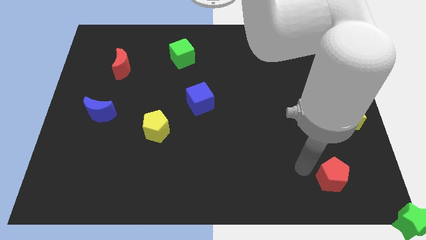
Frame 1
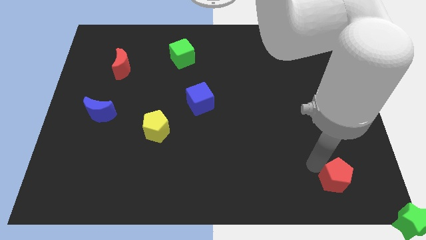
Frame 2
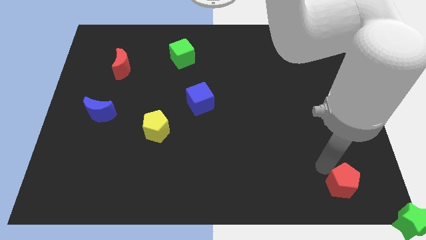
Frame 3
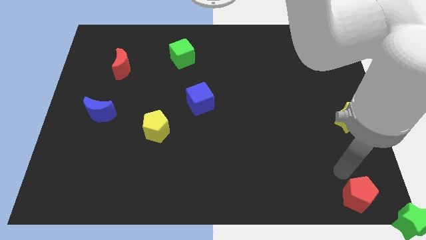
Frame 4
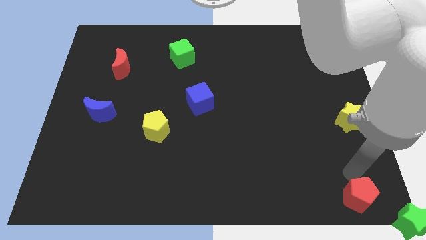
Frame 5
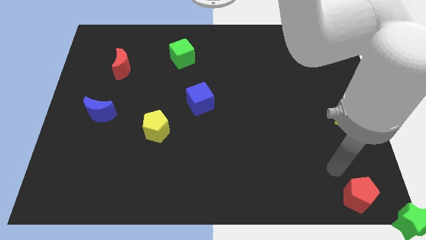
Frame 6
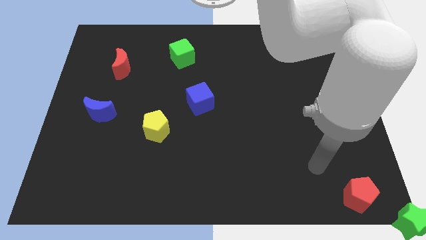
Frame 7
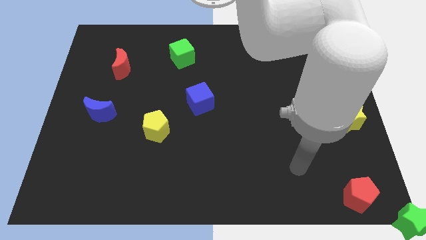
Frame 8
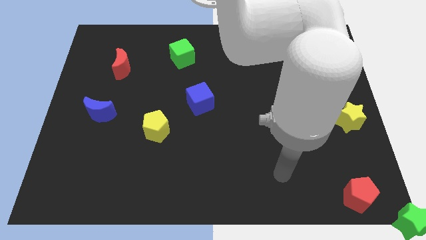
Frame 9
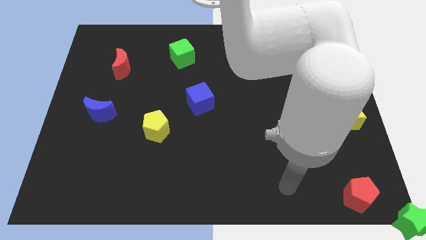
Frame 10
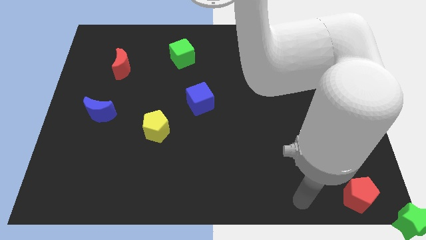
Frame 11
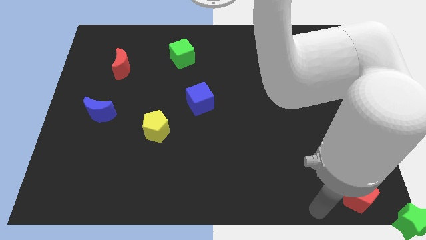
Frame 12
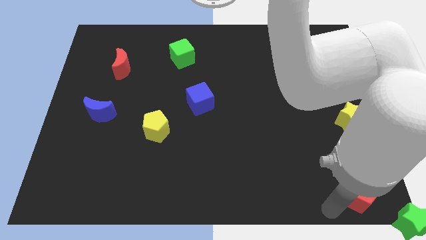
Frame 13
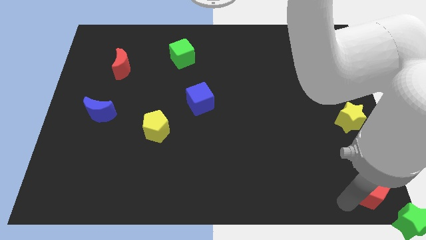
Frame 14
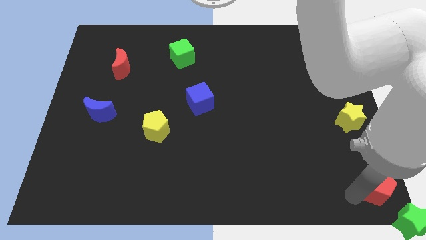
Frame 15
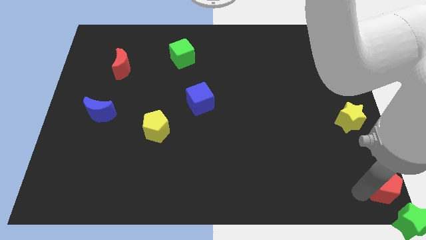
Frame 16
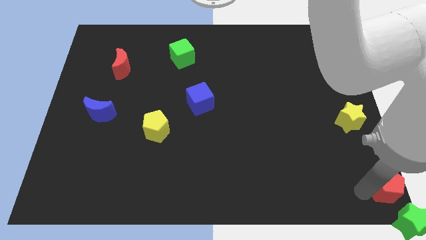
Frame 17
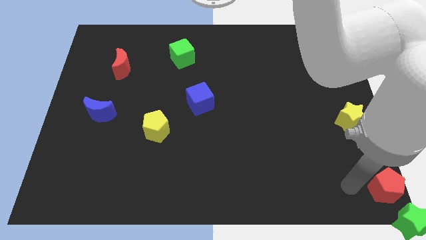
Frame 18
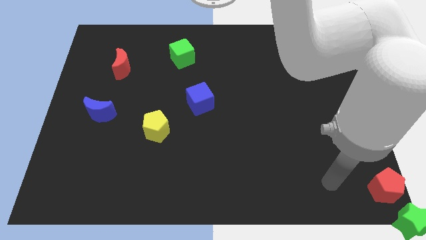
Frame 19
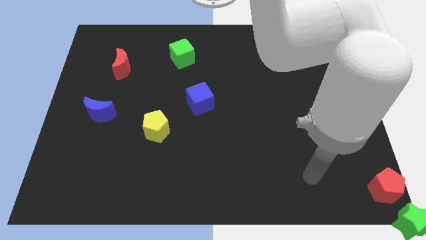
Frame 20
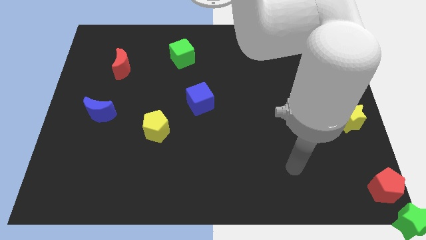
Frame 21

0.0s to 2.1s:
slide the red pentagon towards the bottom right

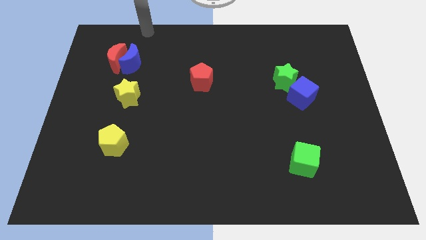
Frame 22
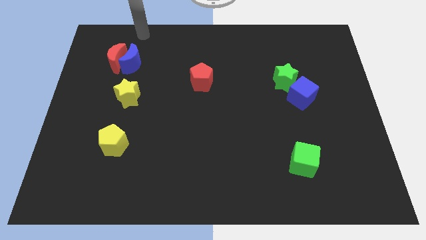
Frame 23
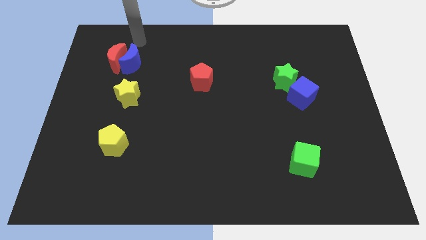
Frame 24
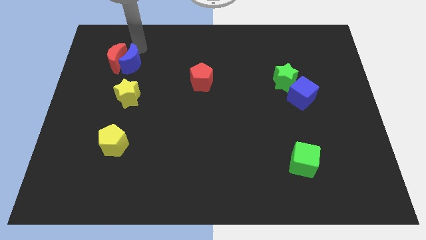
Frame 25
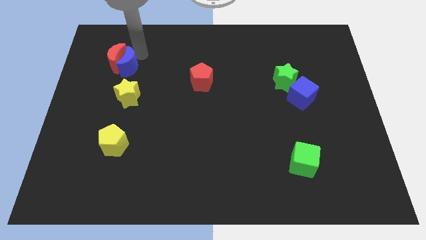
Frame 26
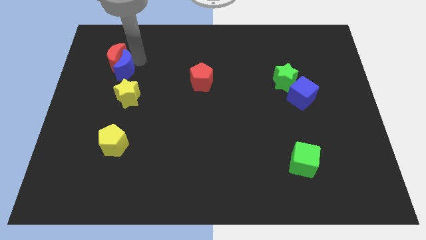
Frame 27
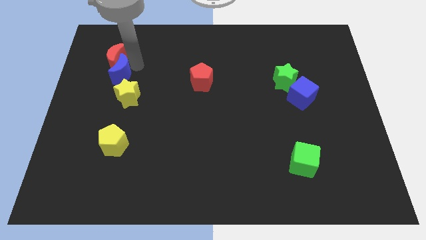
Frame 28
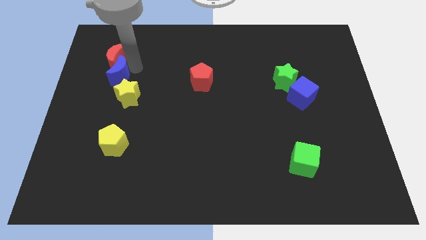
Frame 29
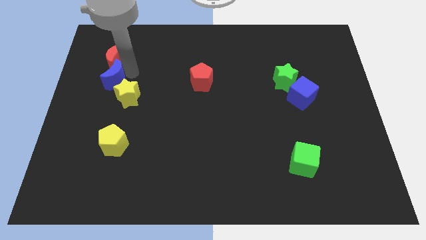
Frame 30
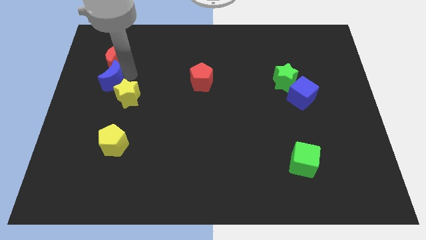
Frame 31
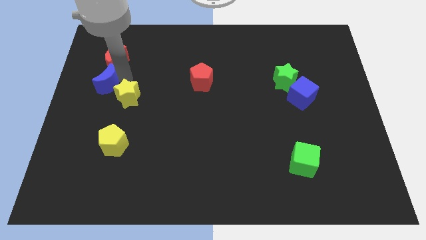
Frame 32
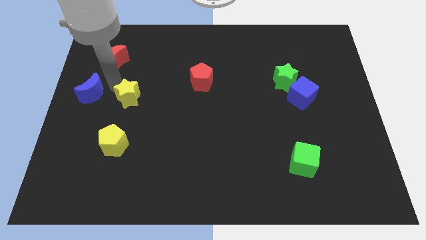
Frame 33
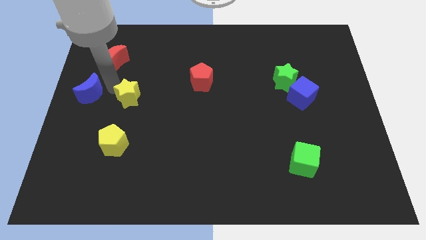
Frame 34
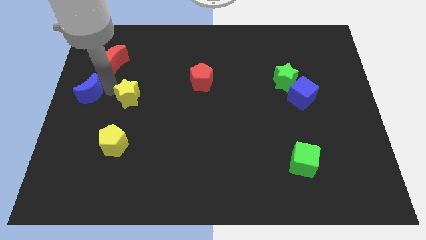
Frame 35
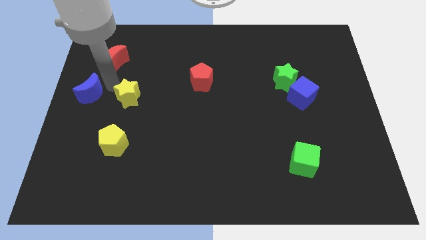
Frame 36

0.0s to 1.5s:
move blue moon to the left of the yellow star

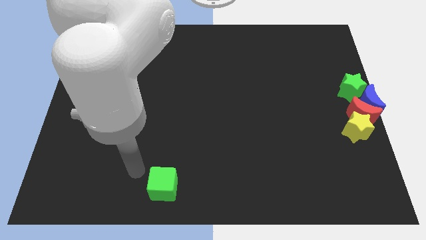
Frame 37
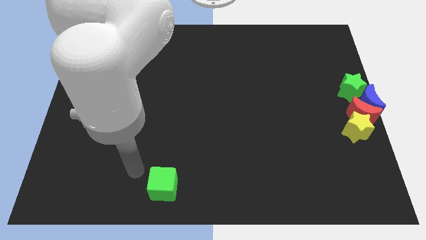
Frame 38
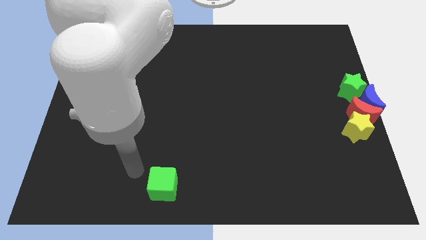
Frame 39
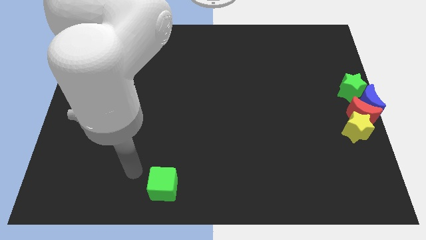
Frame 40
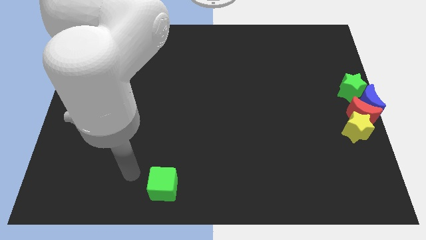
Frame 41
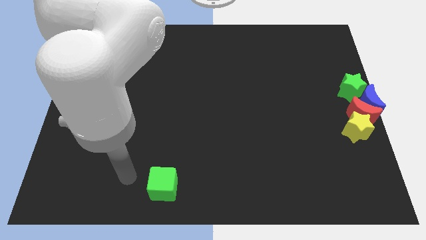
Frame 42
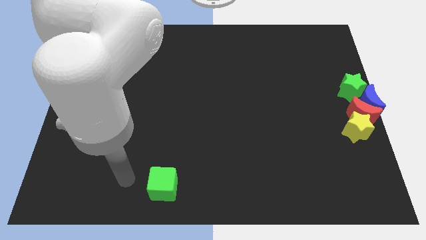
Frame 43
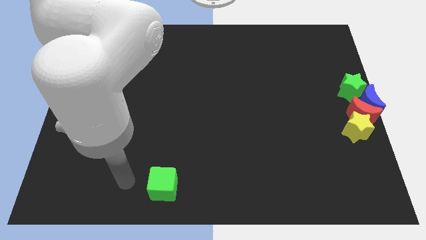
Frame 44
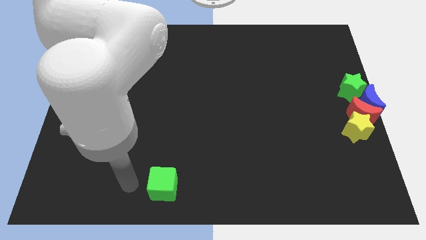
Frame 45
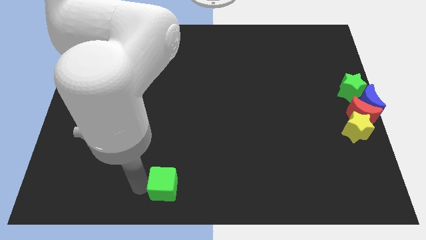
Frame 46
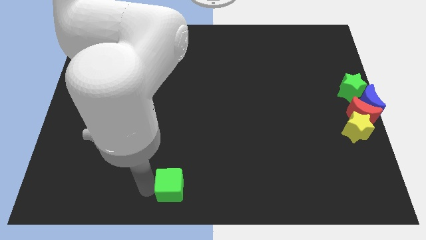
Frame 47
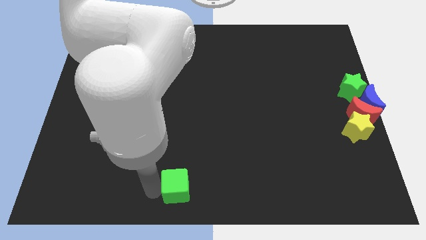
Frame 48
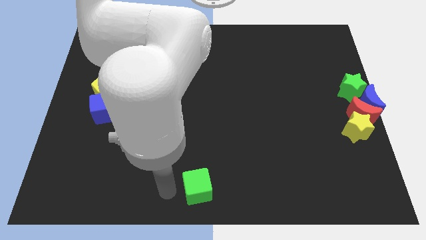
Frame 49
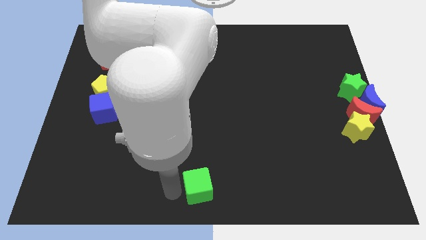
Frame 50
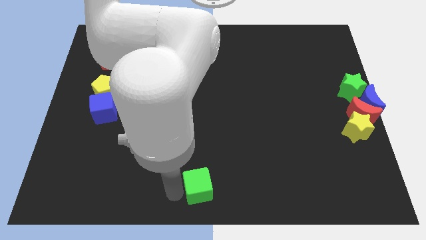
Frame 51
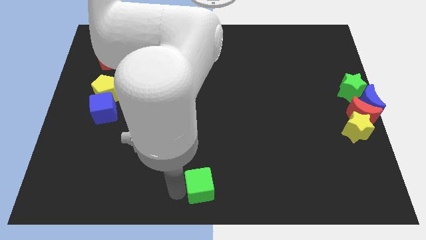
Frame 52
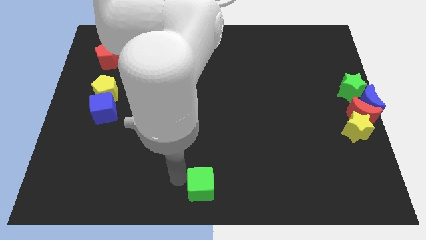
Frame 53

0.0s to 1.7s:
move the green cube to the bottom center

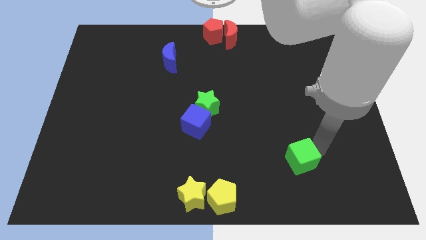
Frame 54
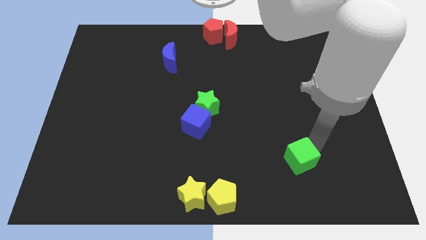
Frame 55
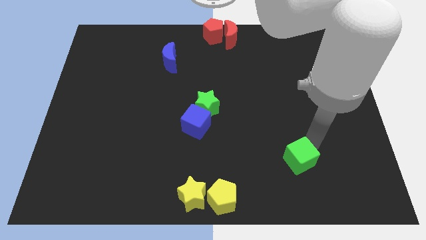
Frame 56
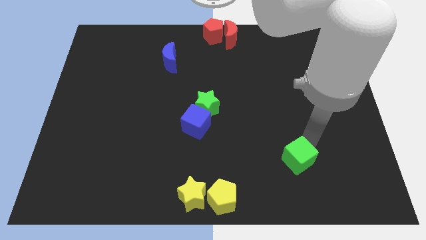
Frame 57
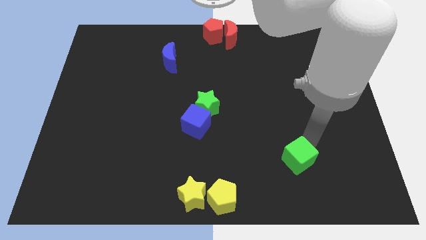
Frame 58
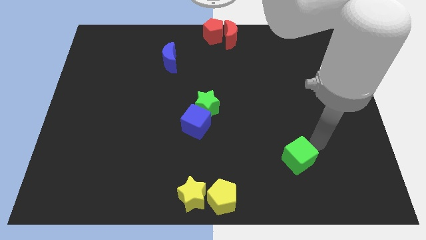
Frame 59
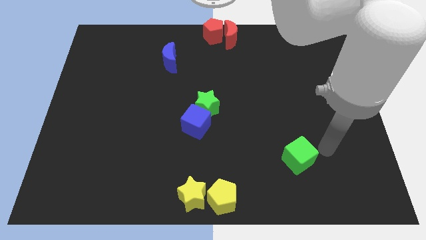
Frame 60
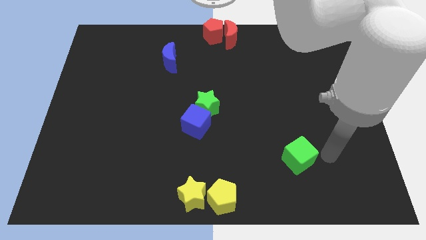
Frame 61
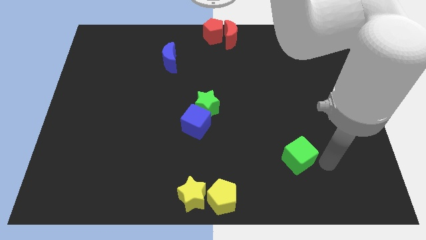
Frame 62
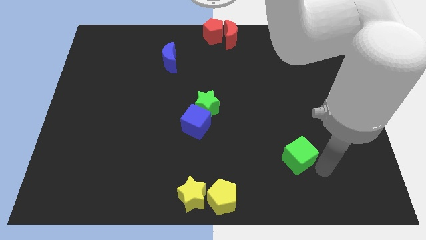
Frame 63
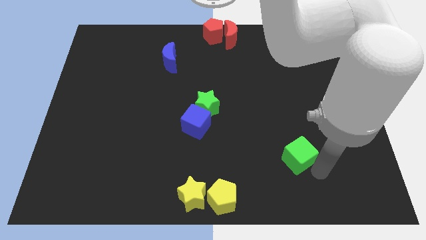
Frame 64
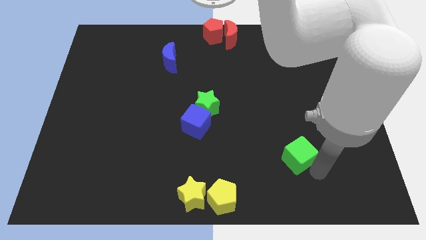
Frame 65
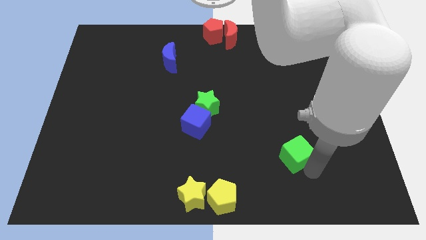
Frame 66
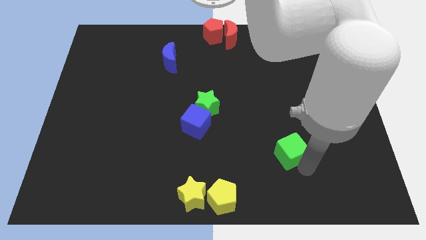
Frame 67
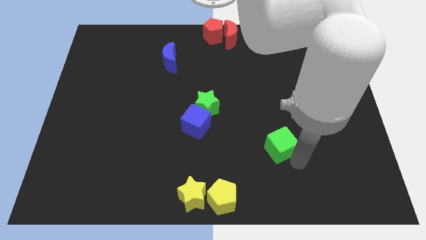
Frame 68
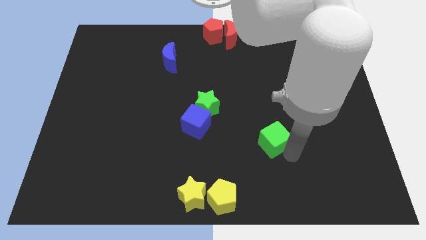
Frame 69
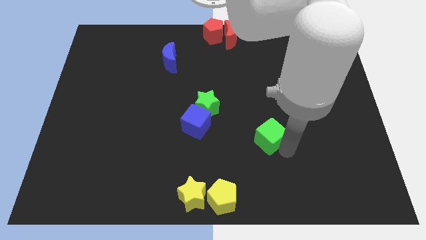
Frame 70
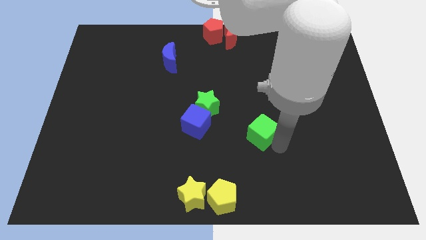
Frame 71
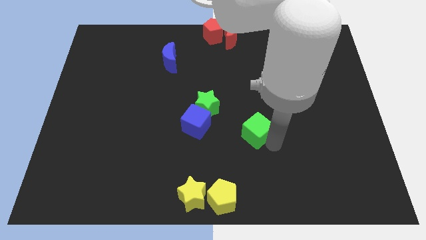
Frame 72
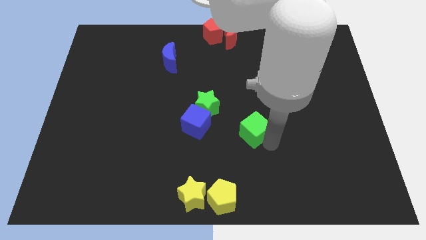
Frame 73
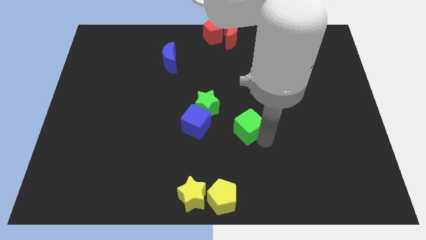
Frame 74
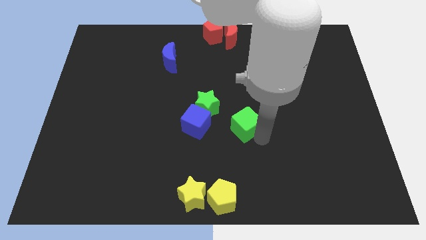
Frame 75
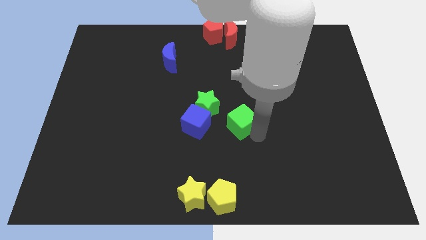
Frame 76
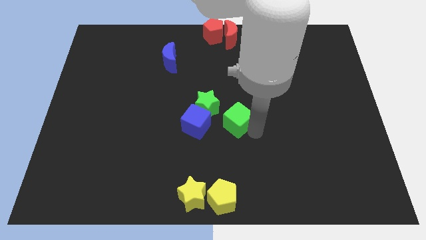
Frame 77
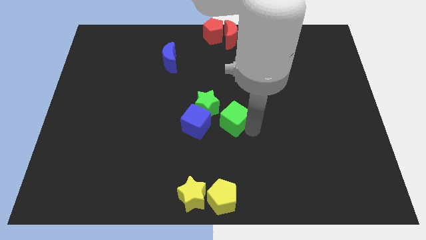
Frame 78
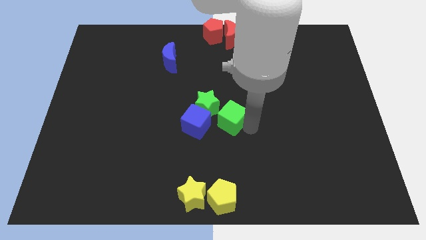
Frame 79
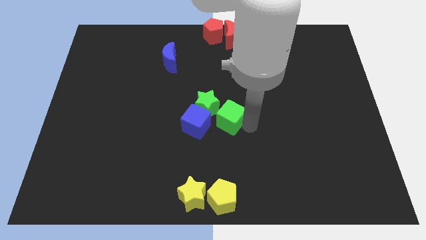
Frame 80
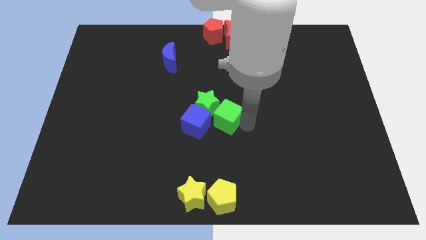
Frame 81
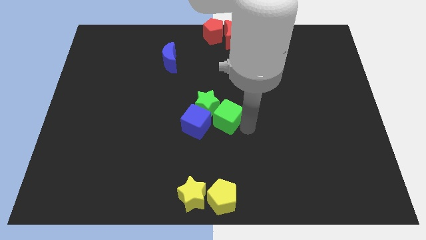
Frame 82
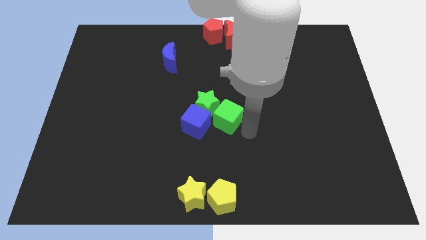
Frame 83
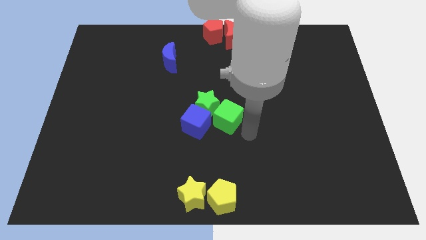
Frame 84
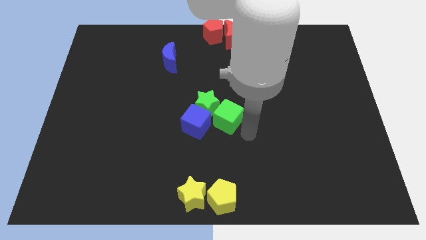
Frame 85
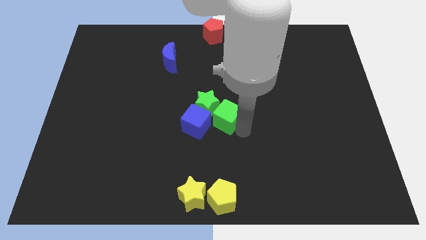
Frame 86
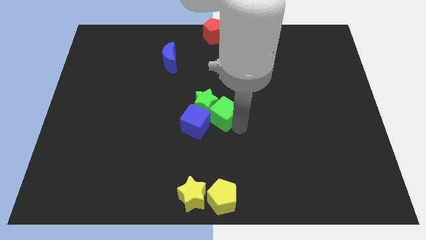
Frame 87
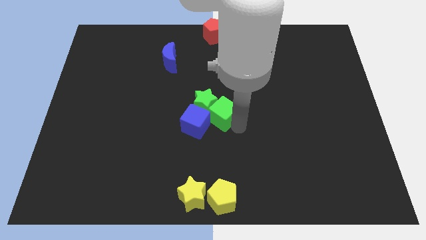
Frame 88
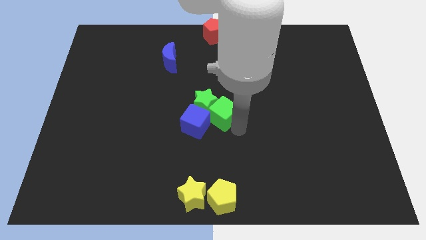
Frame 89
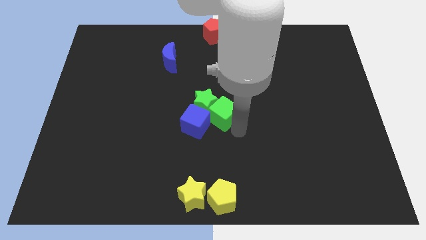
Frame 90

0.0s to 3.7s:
push the green cube close to the green star
